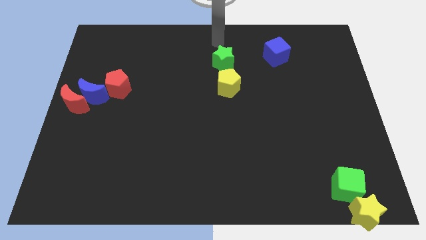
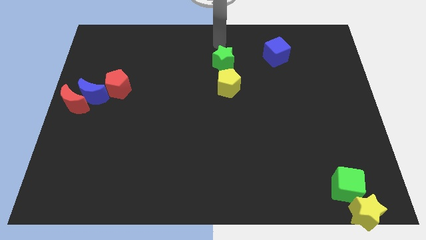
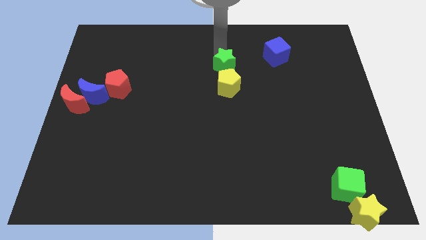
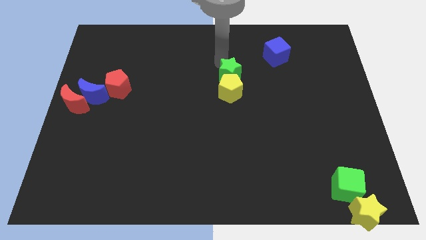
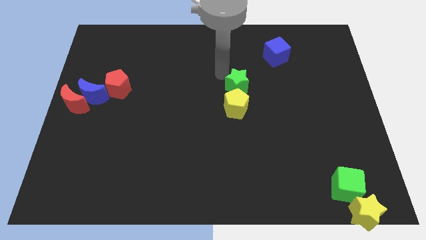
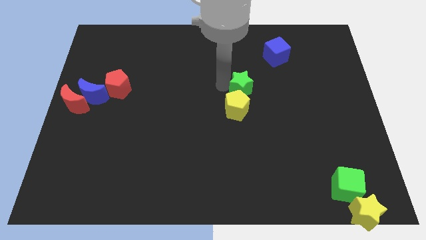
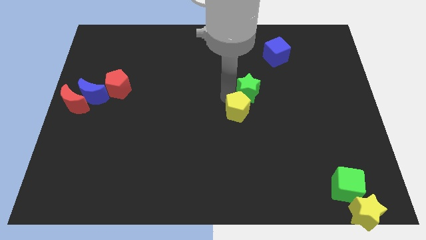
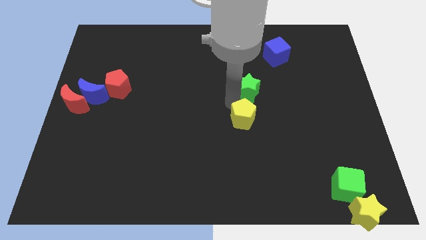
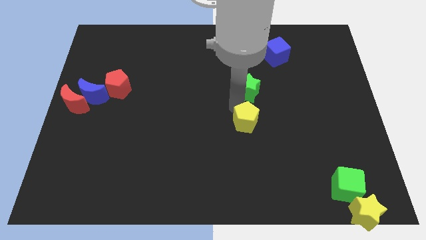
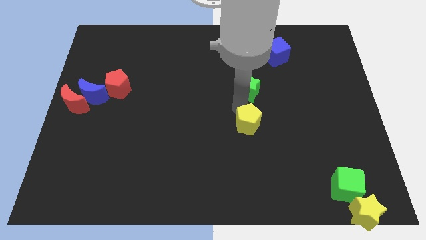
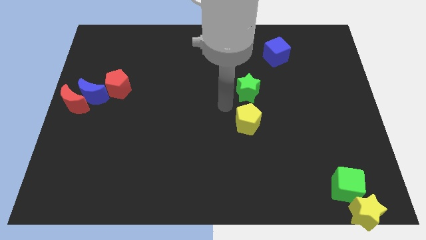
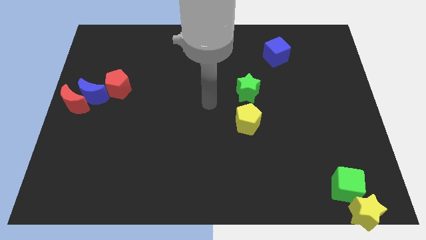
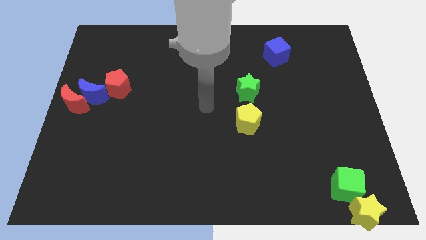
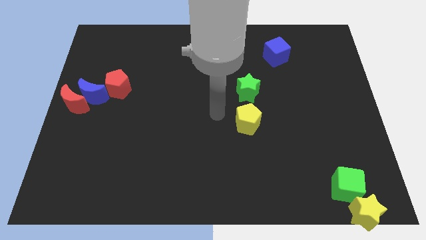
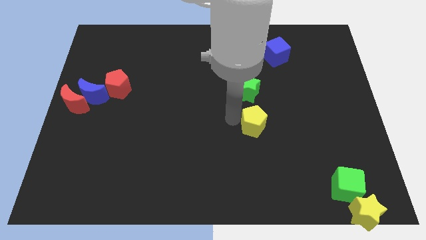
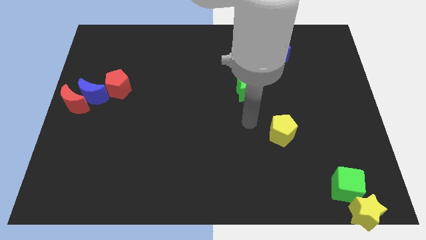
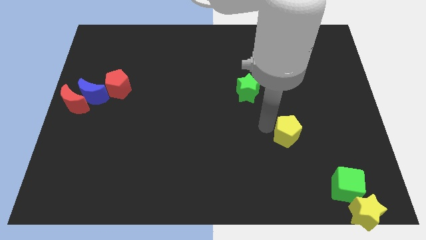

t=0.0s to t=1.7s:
push the green star and yellow pentagon to the bottom right of the board

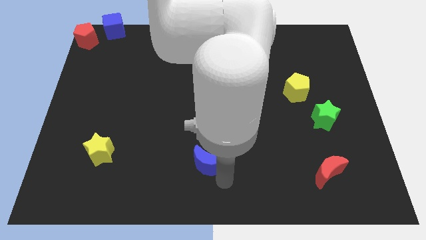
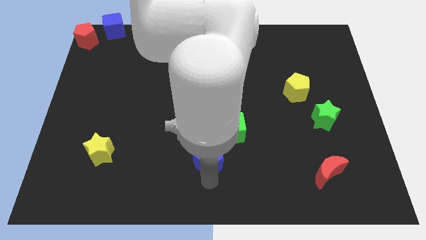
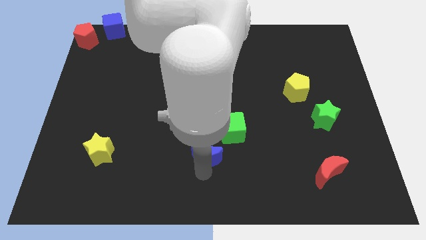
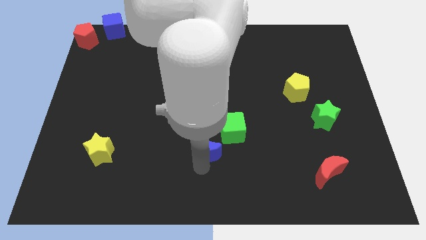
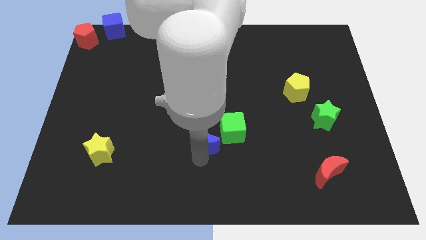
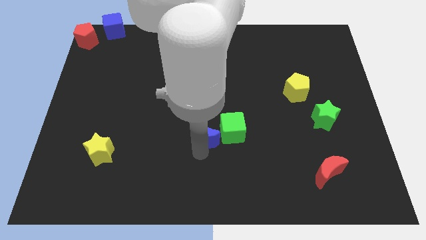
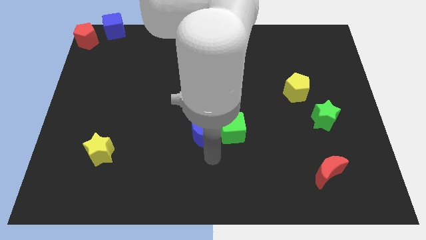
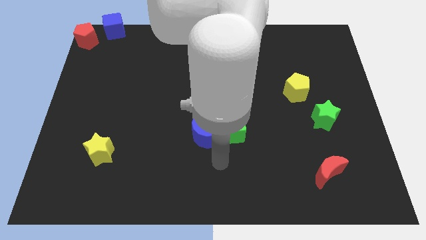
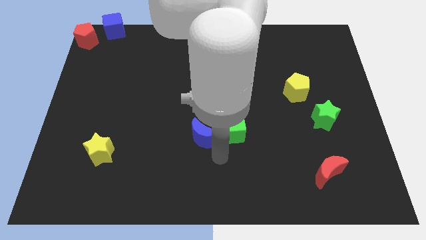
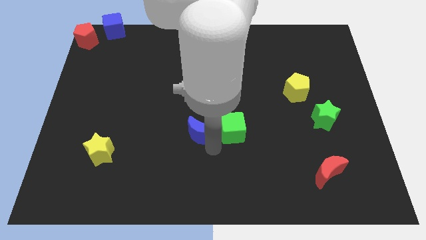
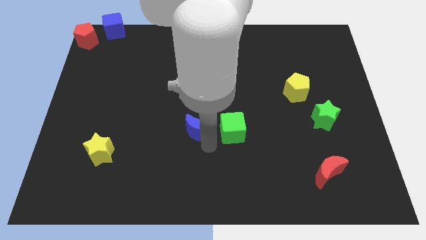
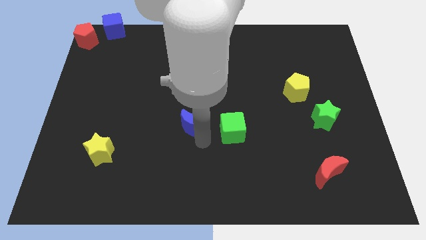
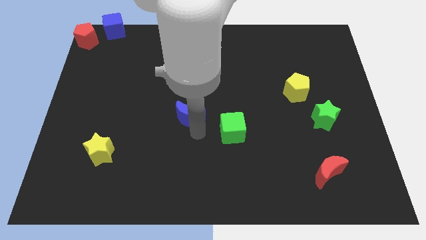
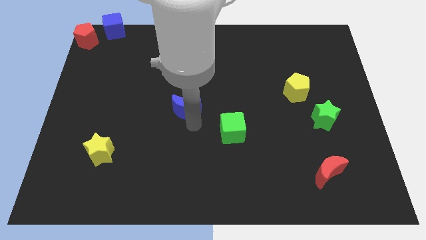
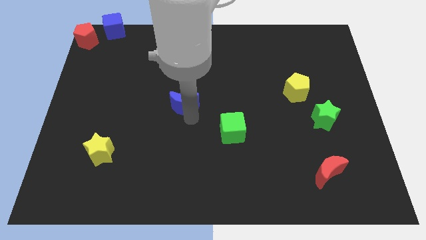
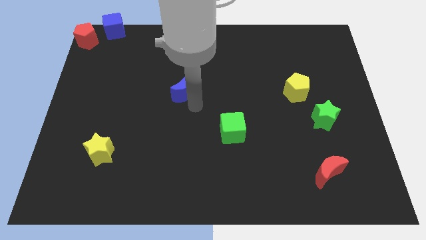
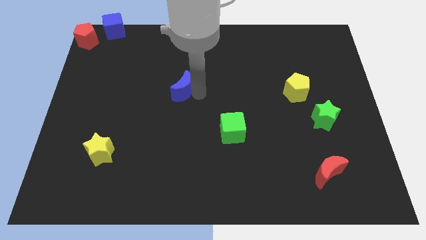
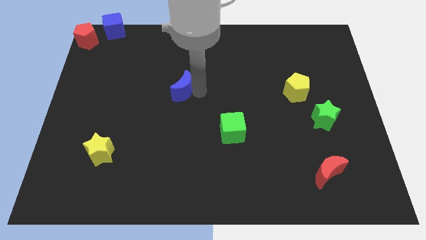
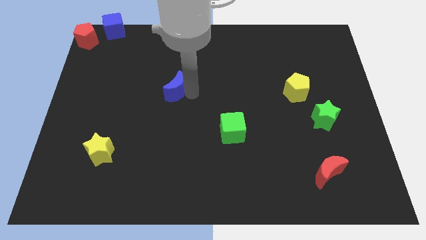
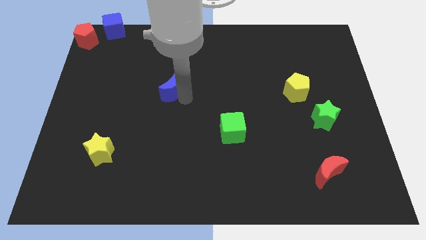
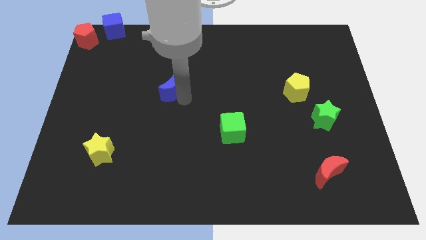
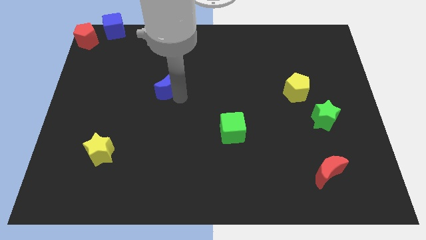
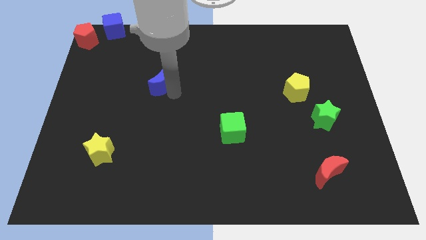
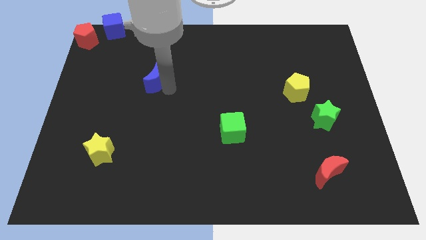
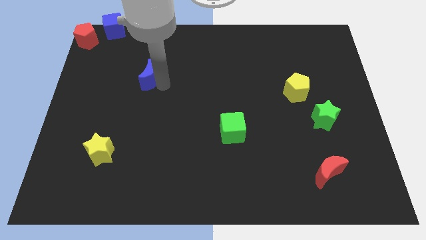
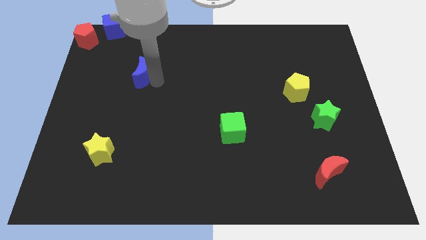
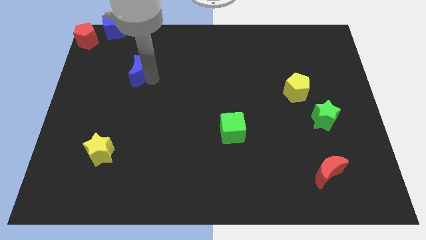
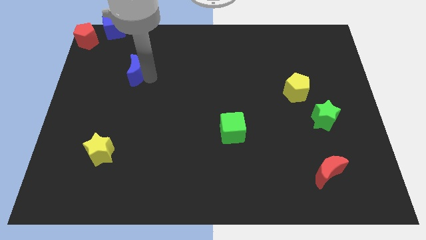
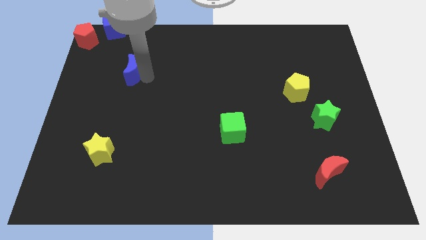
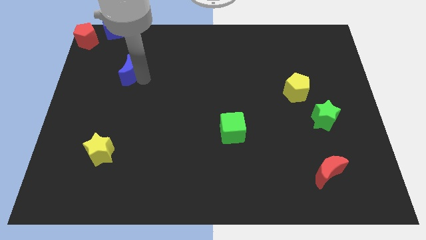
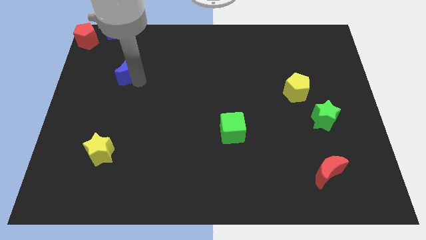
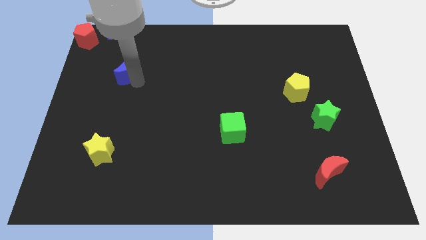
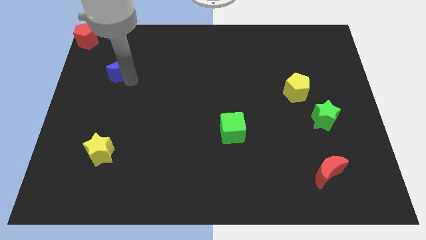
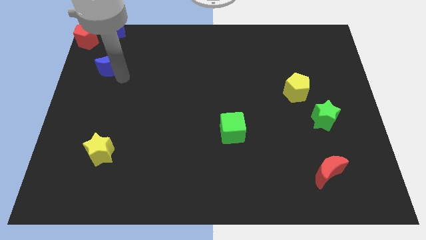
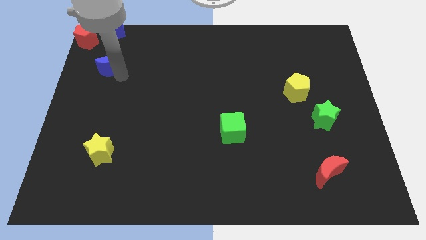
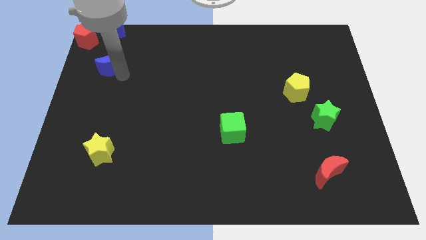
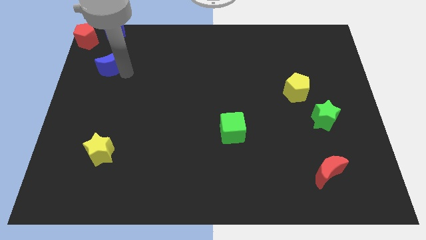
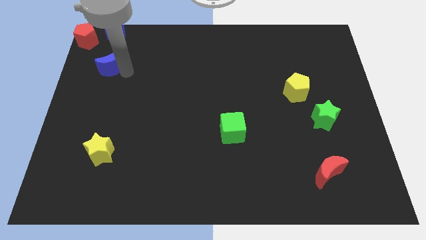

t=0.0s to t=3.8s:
place the blue crescent underneath the blue cube

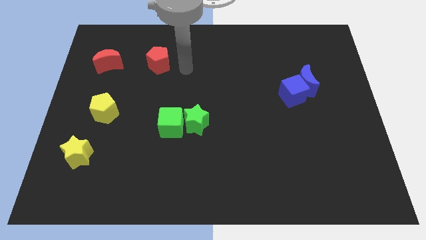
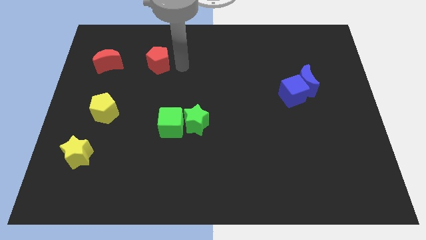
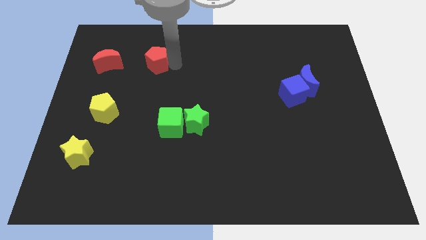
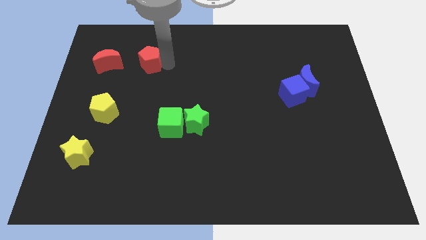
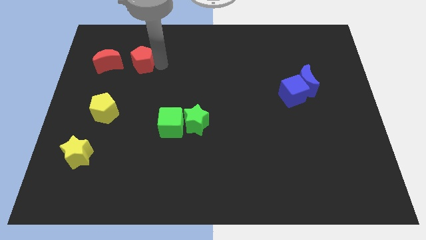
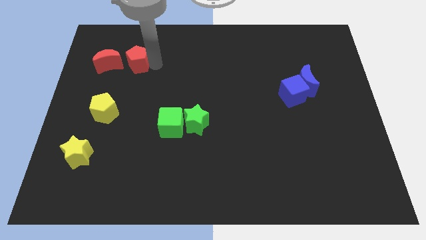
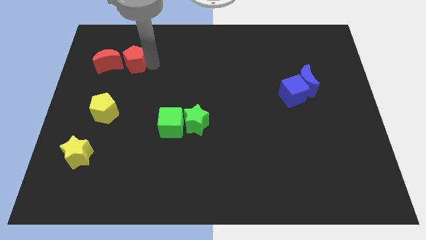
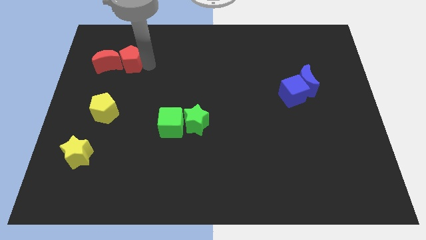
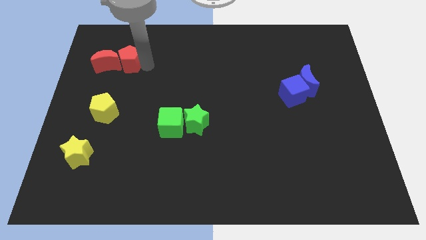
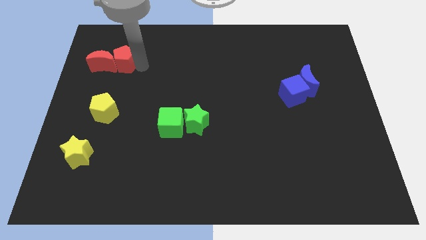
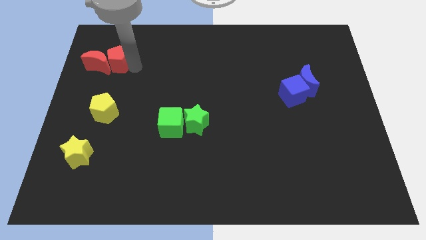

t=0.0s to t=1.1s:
push red pentagon in to red moon

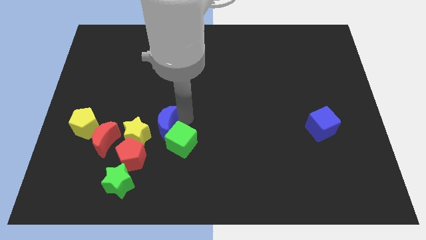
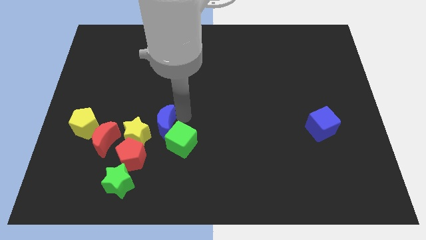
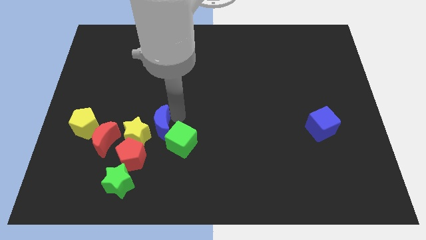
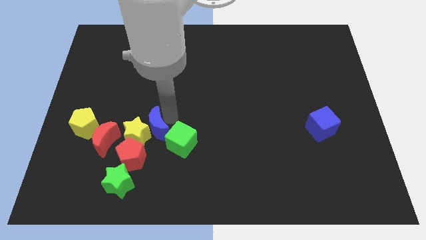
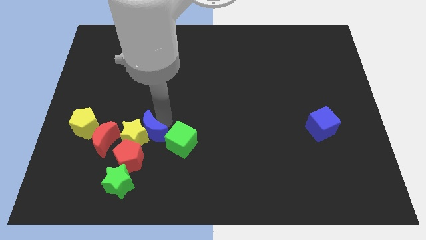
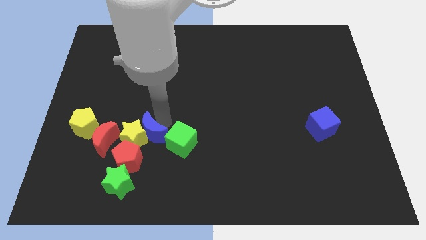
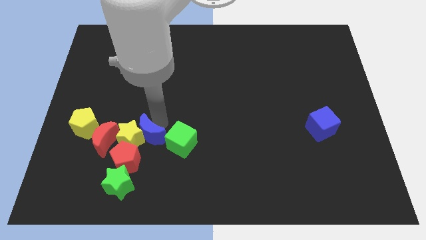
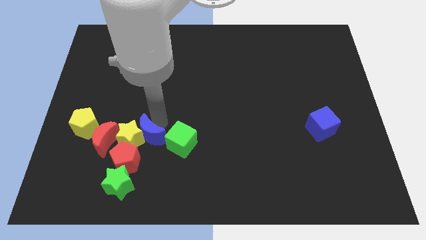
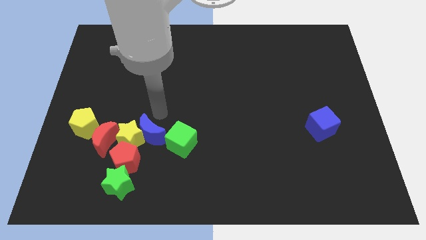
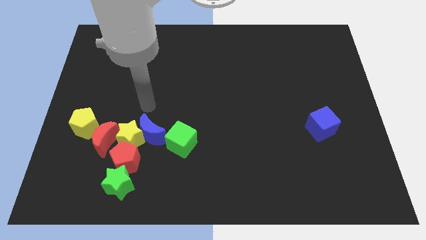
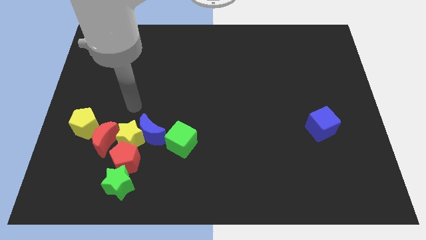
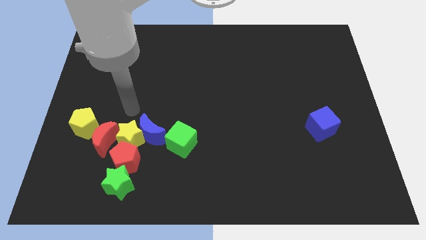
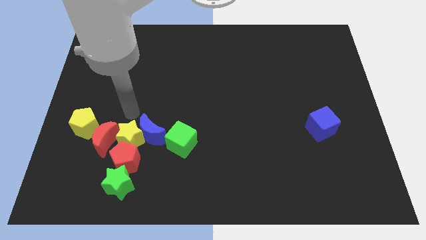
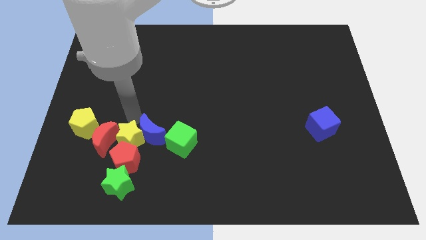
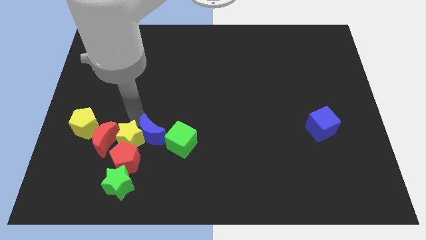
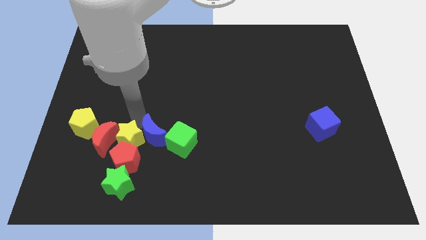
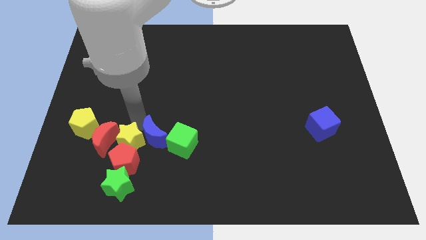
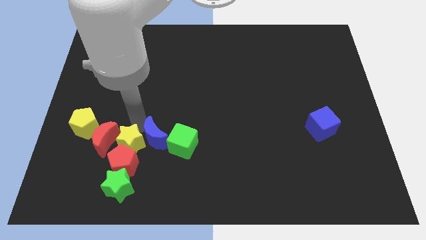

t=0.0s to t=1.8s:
push blue moon into the yellow star

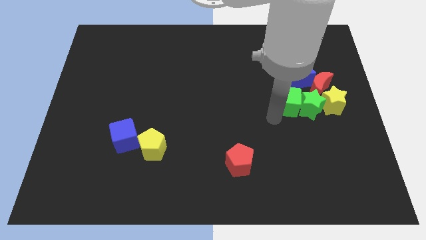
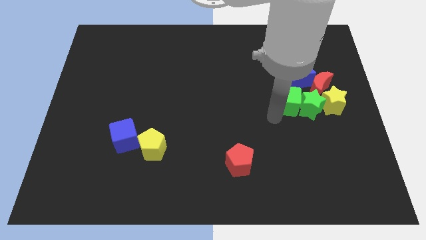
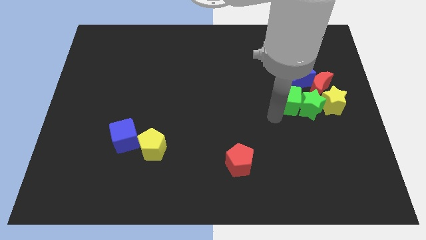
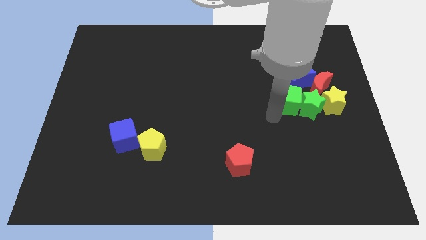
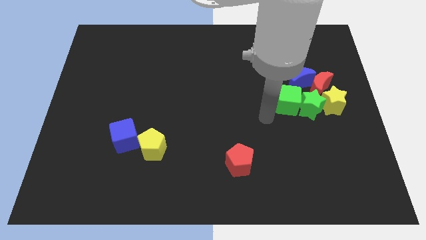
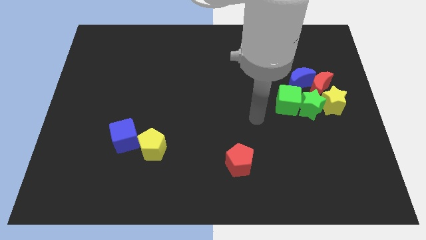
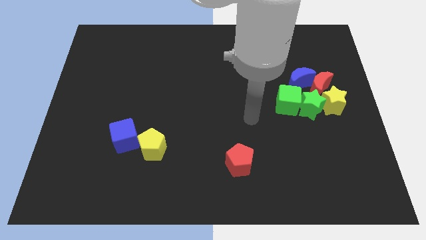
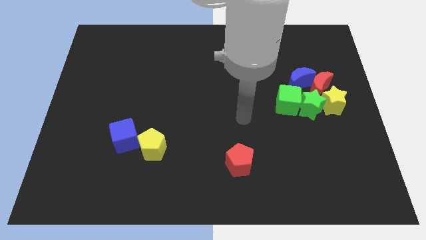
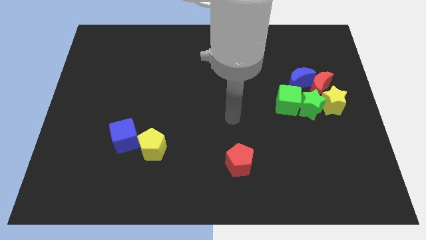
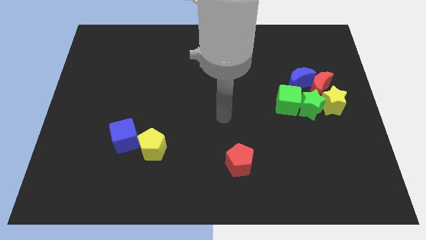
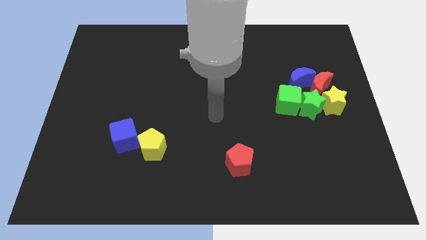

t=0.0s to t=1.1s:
move your arm away from green cube
